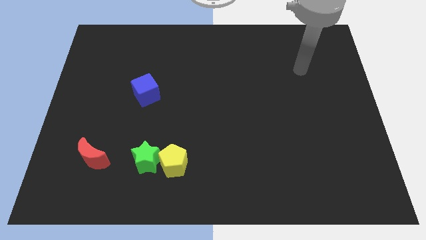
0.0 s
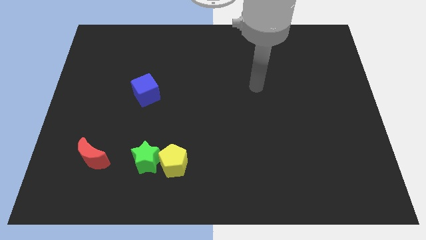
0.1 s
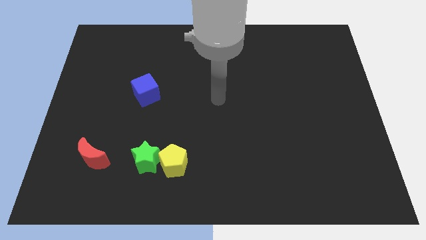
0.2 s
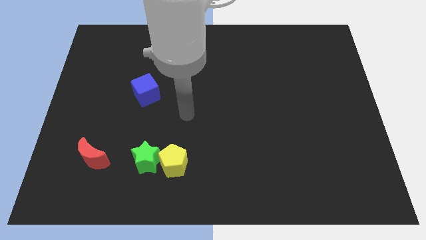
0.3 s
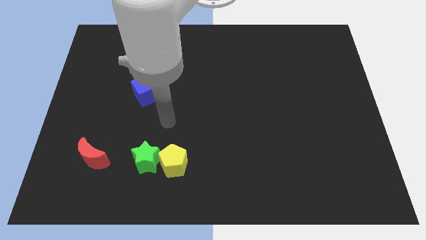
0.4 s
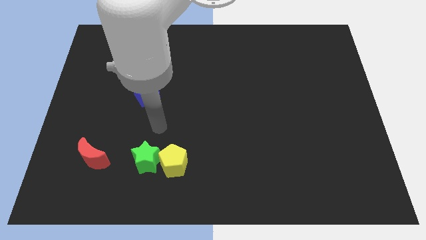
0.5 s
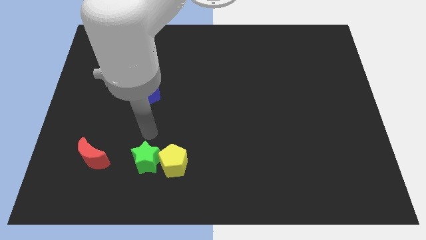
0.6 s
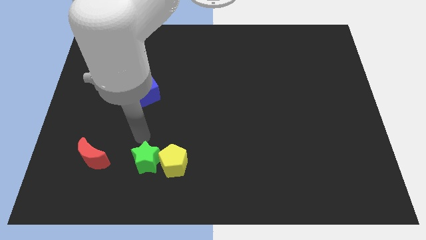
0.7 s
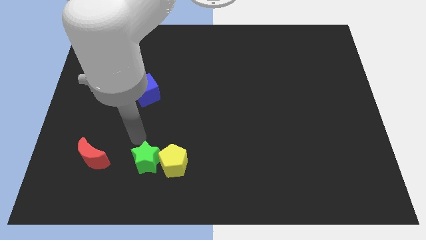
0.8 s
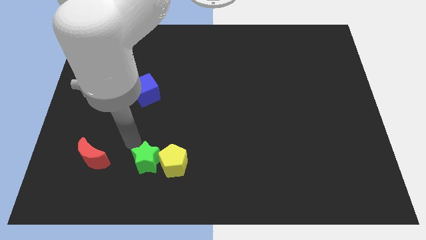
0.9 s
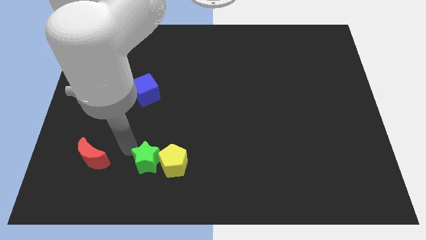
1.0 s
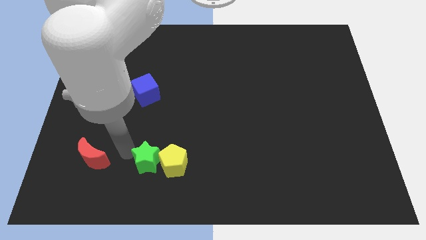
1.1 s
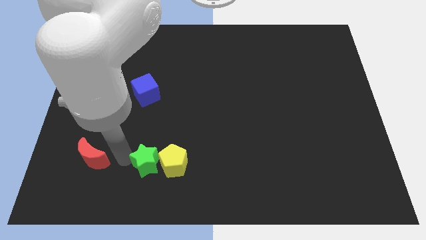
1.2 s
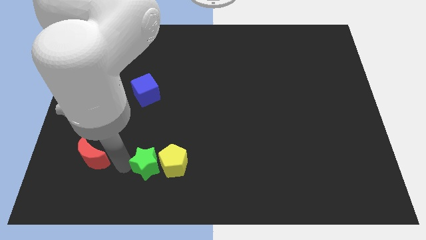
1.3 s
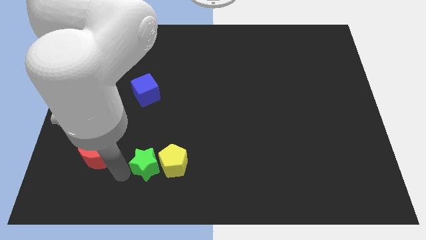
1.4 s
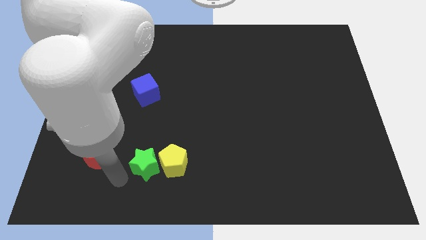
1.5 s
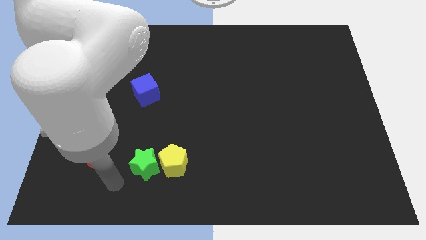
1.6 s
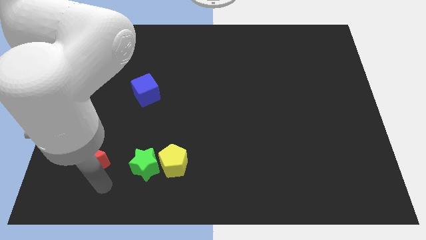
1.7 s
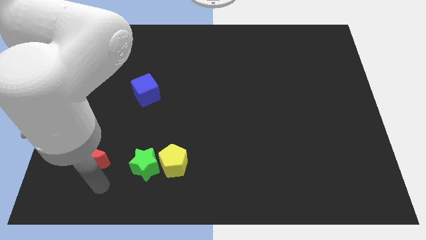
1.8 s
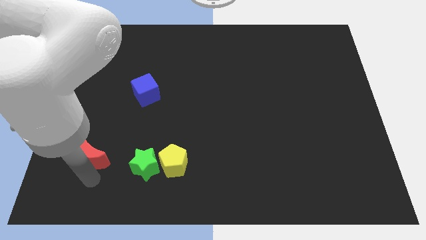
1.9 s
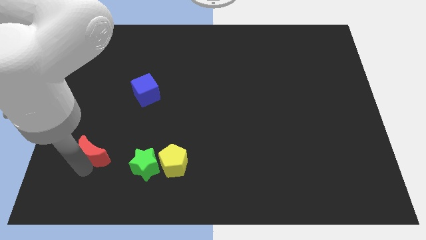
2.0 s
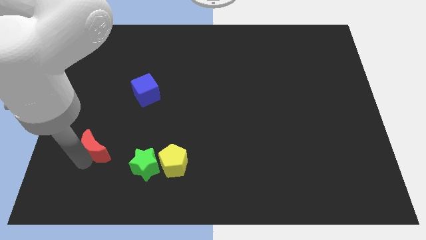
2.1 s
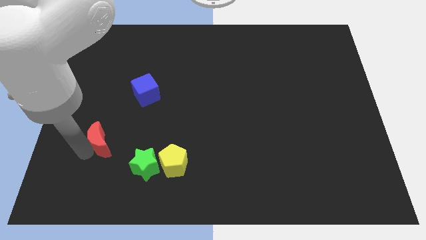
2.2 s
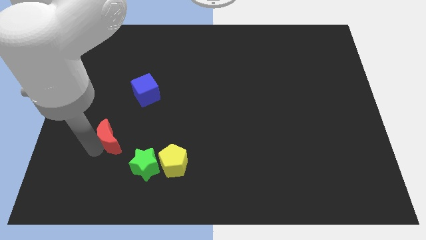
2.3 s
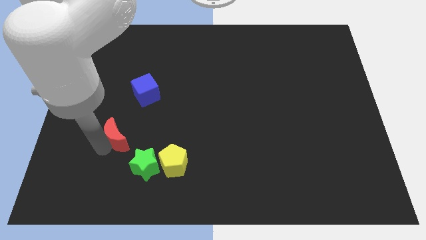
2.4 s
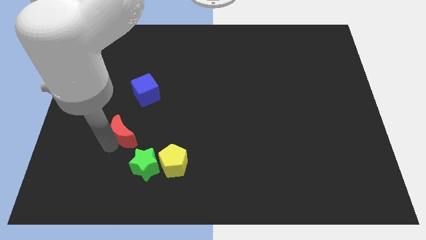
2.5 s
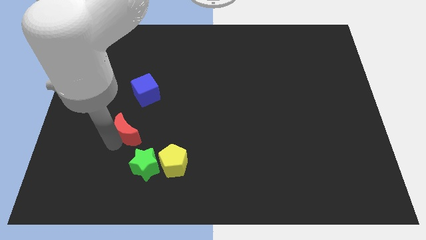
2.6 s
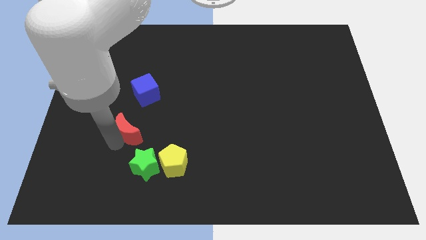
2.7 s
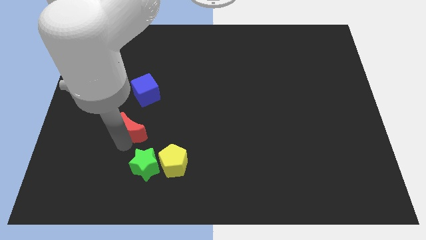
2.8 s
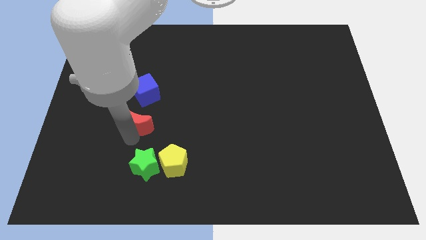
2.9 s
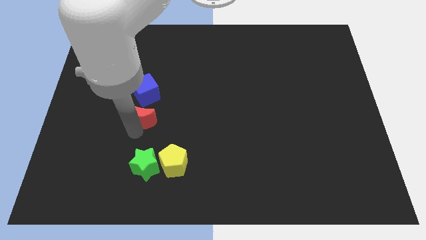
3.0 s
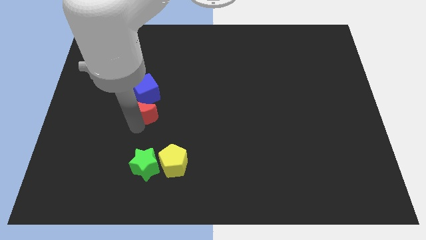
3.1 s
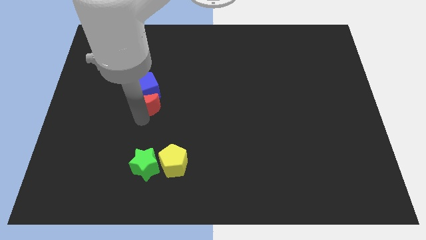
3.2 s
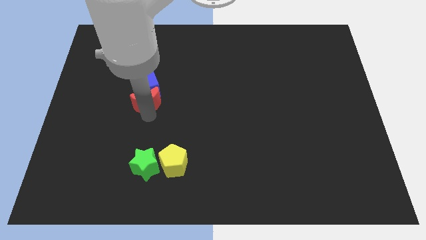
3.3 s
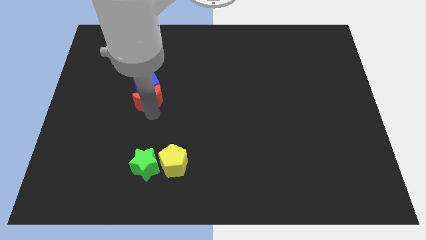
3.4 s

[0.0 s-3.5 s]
push the moon next to the blue block

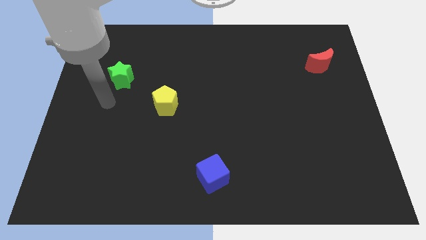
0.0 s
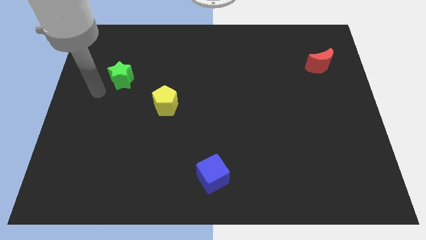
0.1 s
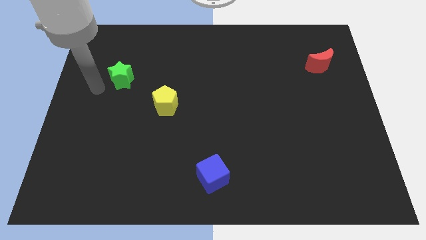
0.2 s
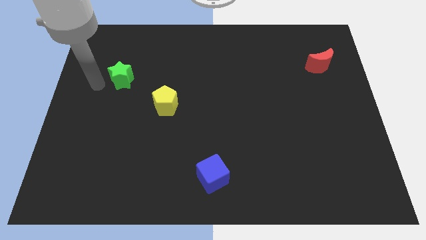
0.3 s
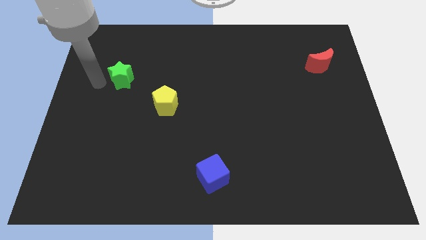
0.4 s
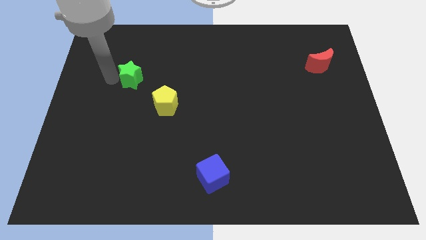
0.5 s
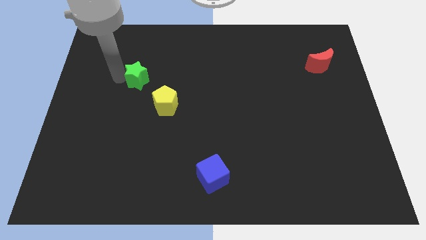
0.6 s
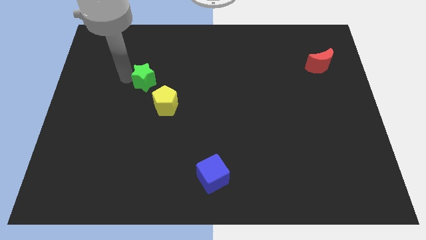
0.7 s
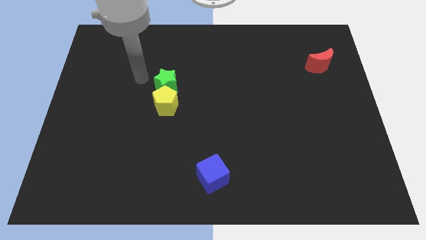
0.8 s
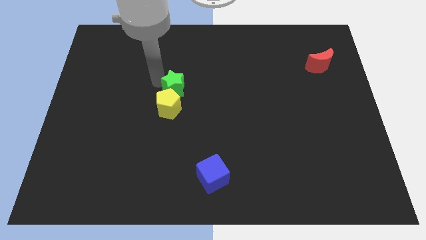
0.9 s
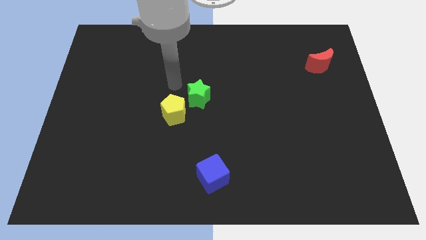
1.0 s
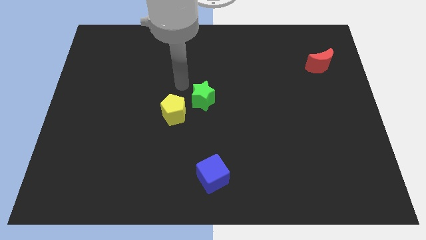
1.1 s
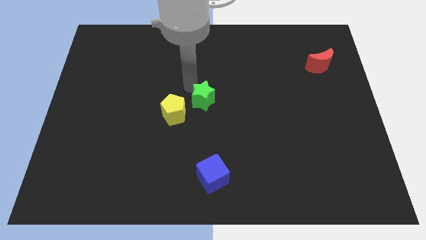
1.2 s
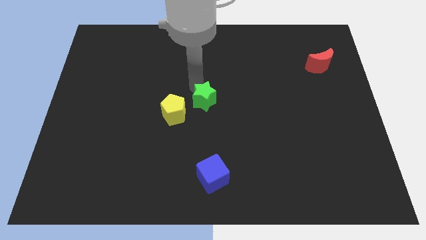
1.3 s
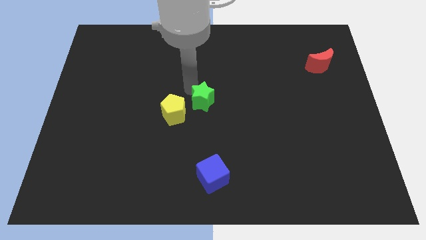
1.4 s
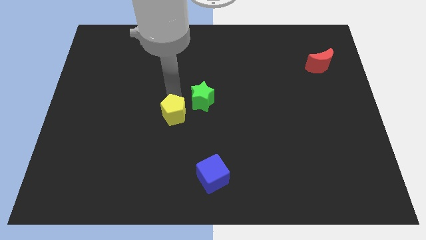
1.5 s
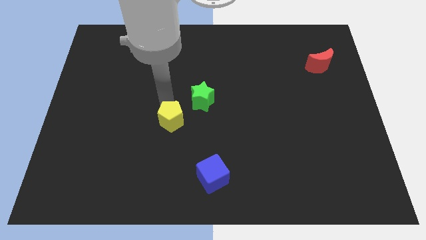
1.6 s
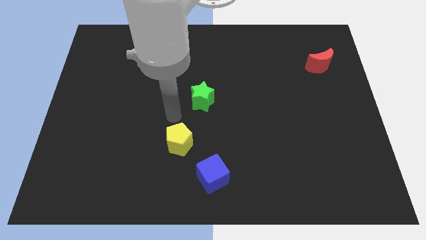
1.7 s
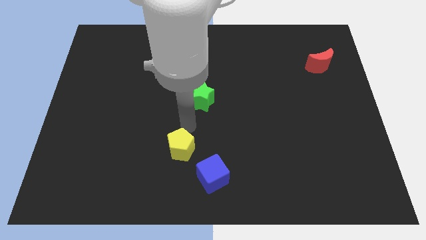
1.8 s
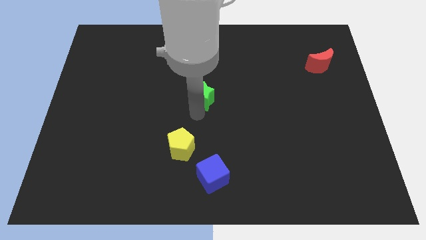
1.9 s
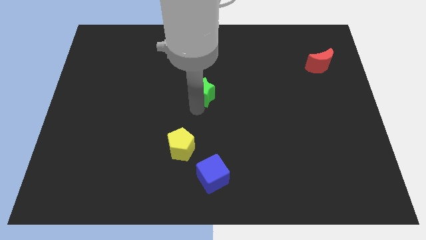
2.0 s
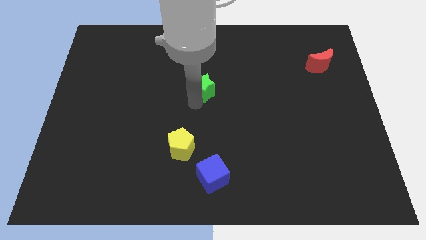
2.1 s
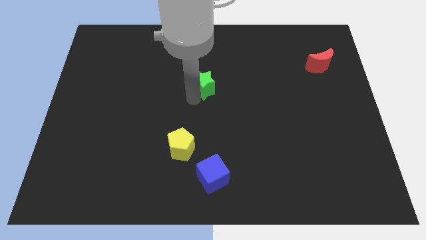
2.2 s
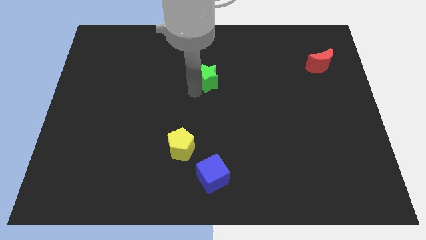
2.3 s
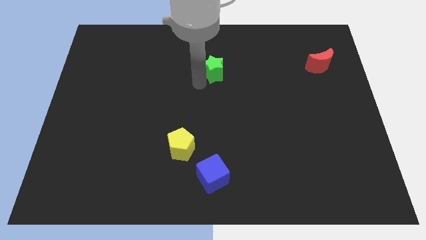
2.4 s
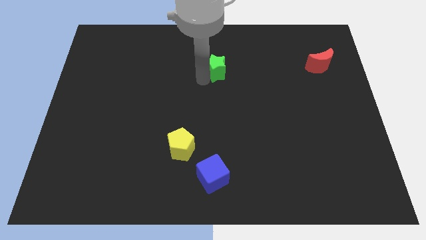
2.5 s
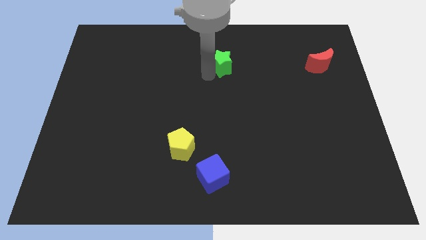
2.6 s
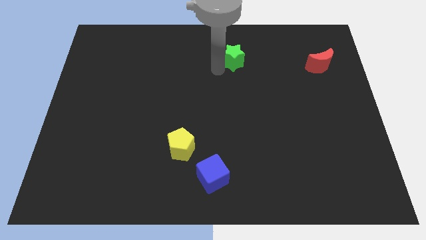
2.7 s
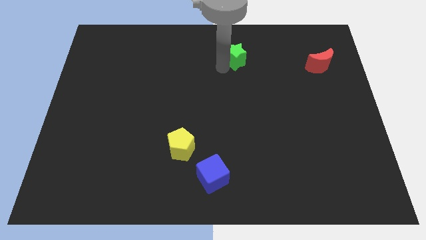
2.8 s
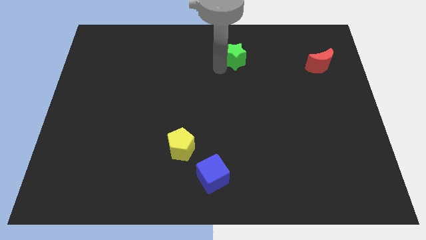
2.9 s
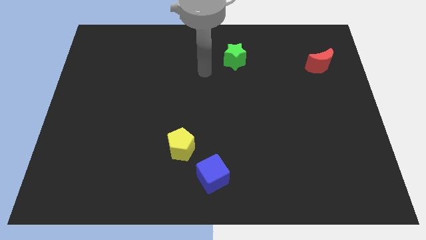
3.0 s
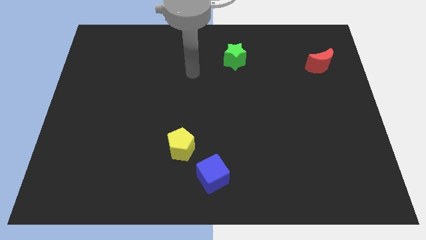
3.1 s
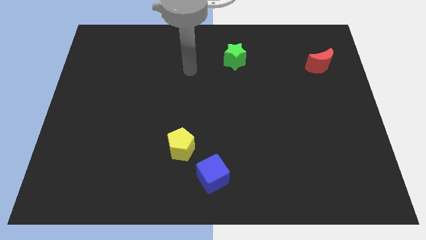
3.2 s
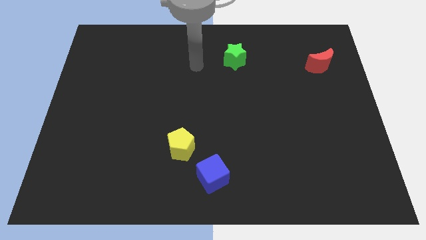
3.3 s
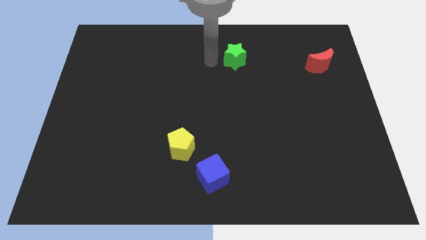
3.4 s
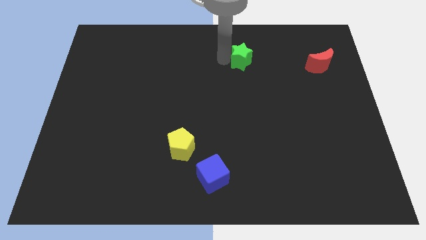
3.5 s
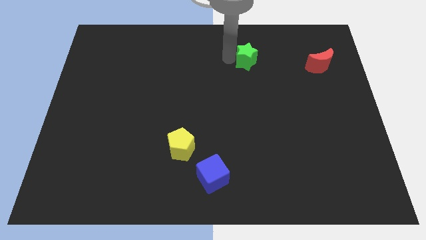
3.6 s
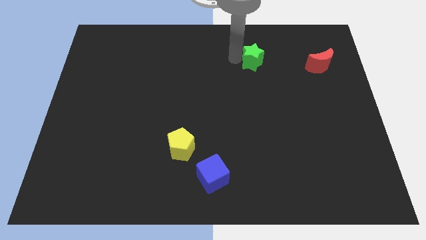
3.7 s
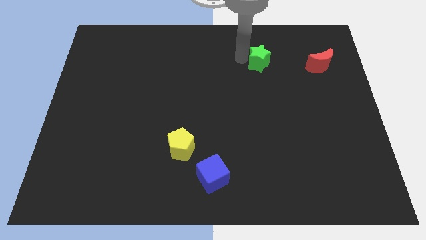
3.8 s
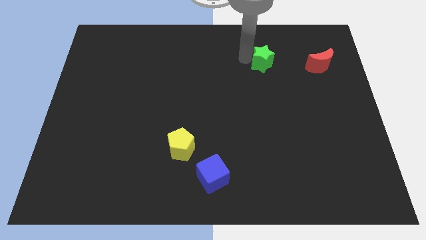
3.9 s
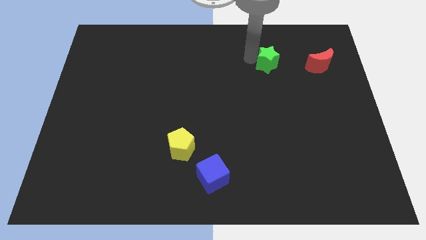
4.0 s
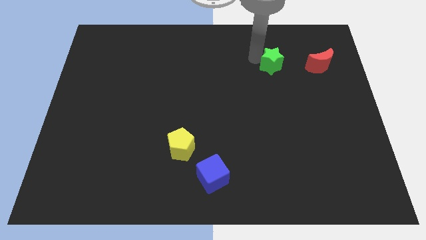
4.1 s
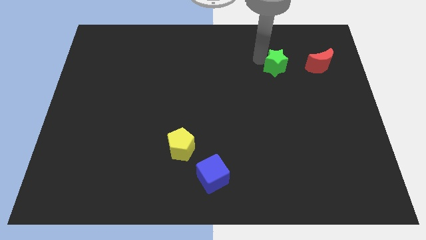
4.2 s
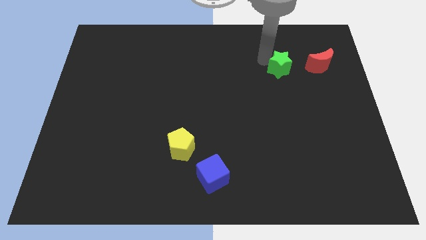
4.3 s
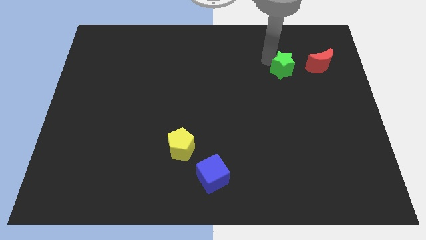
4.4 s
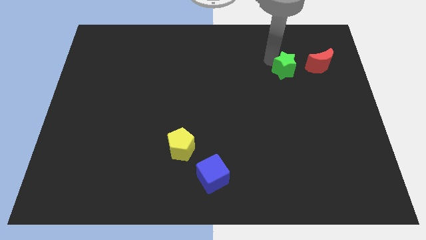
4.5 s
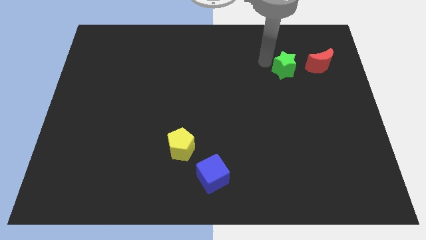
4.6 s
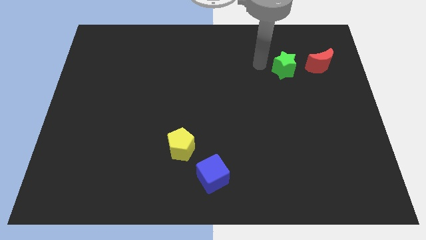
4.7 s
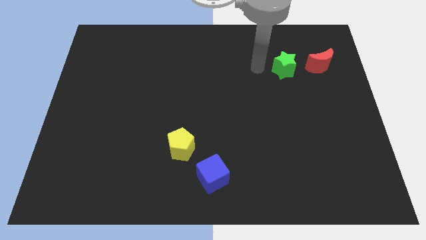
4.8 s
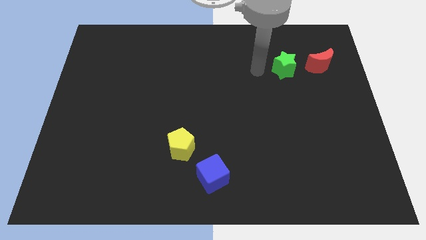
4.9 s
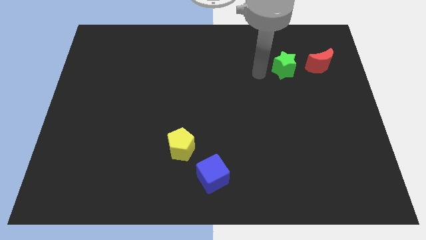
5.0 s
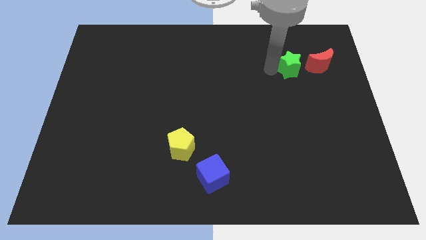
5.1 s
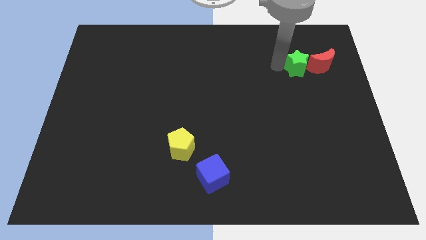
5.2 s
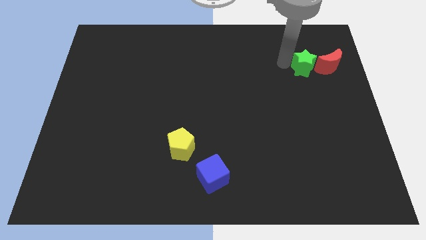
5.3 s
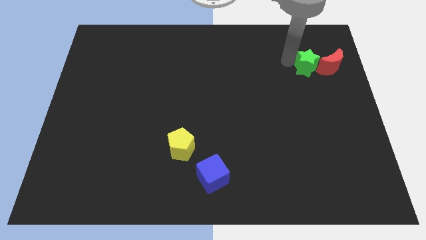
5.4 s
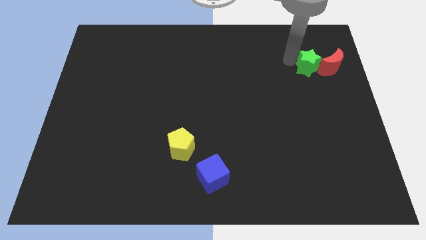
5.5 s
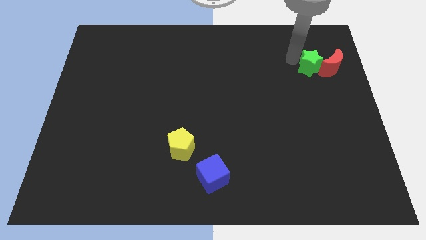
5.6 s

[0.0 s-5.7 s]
put the star to the red block
